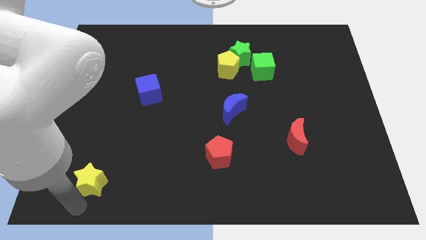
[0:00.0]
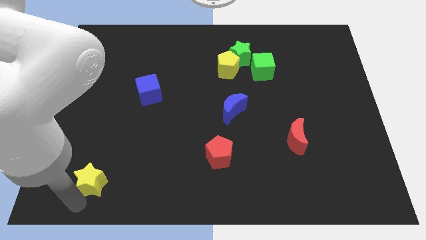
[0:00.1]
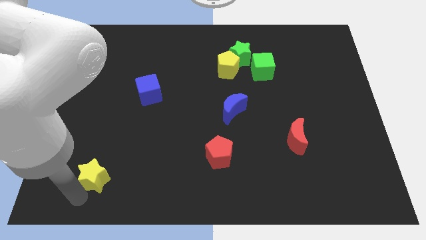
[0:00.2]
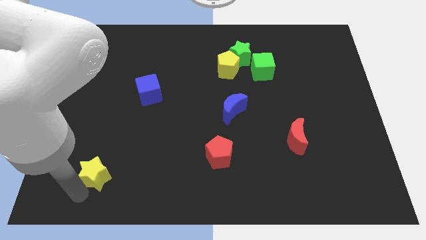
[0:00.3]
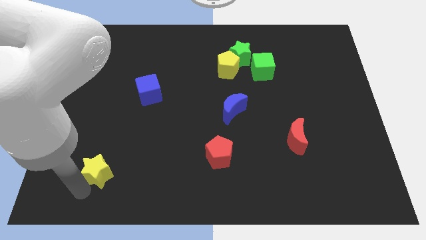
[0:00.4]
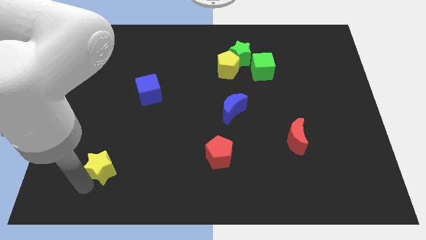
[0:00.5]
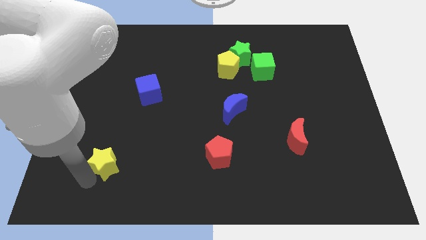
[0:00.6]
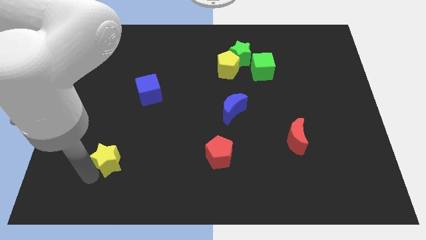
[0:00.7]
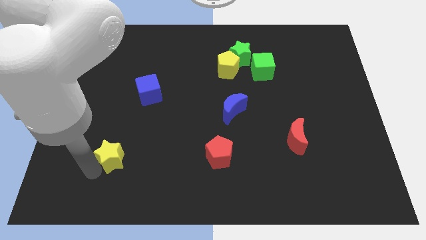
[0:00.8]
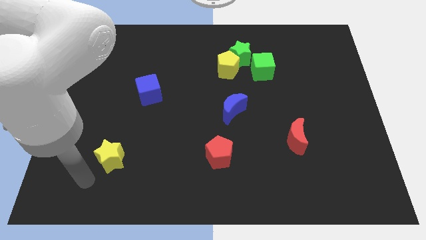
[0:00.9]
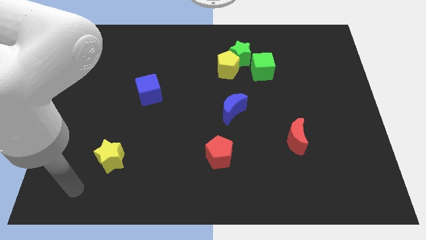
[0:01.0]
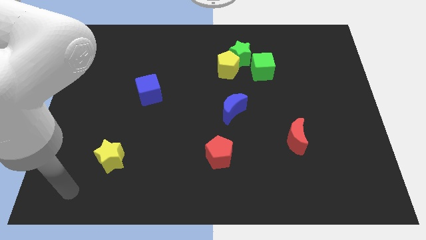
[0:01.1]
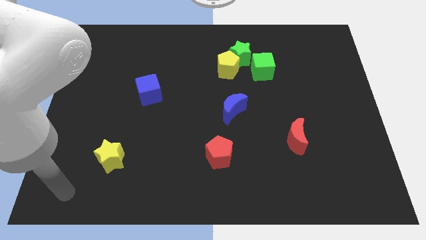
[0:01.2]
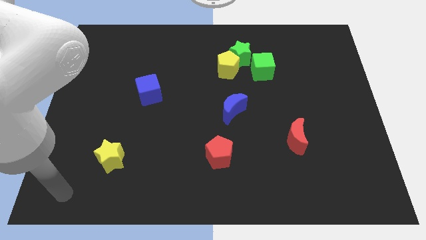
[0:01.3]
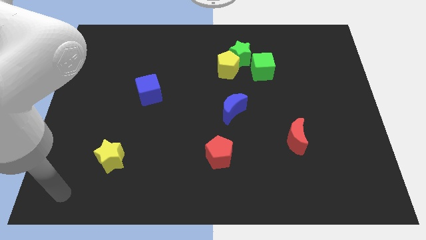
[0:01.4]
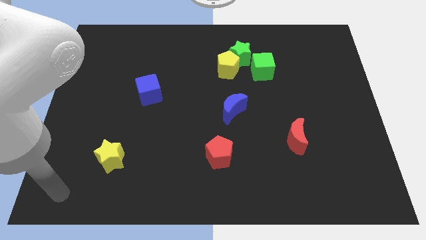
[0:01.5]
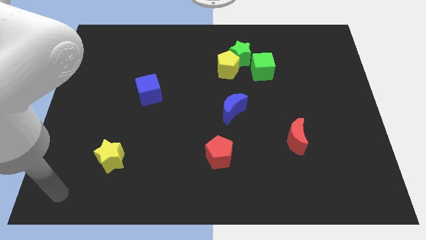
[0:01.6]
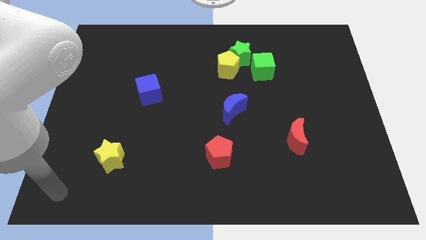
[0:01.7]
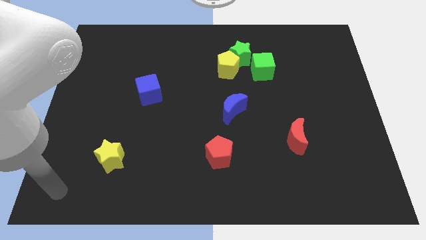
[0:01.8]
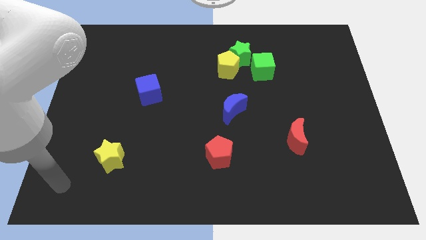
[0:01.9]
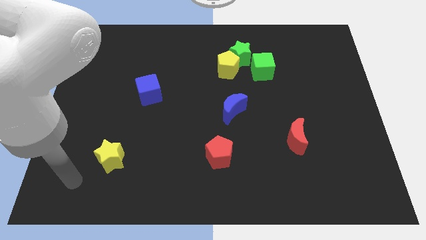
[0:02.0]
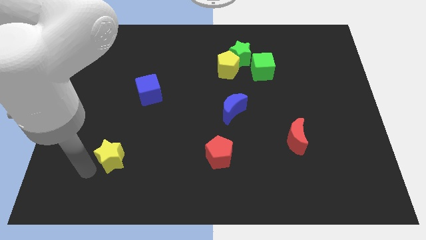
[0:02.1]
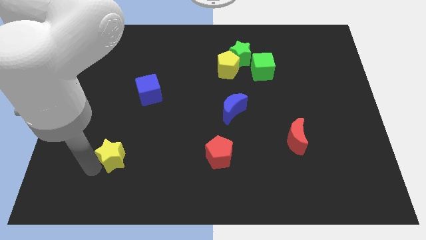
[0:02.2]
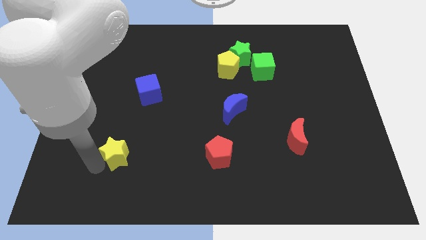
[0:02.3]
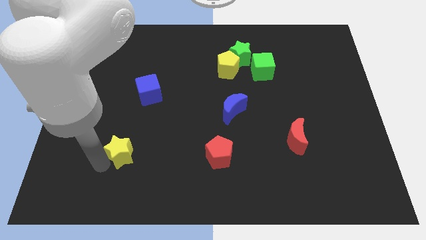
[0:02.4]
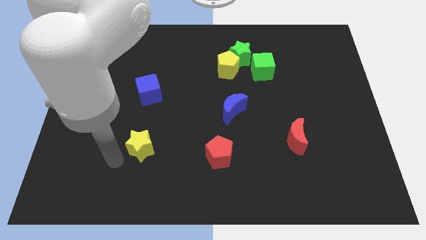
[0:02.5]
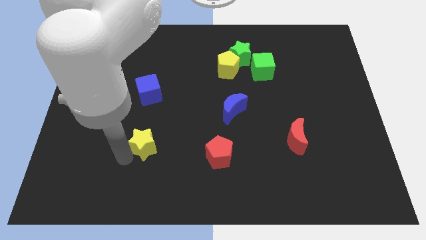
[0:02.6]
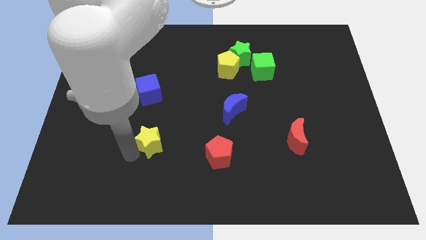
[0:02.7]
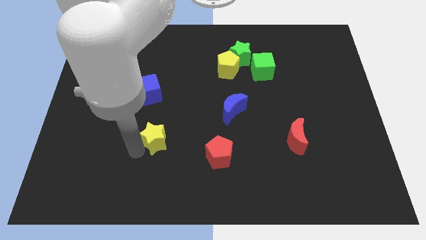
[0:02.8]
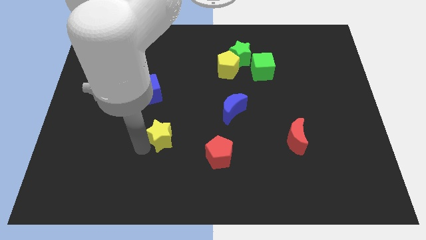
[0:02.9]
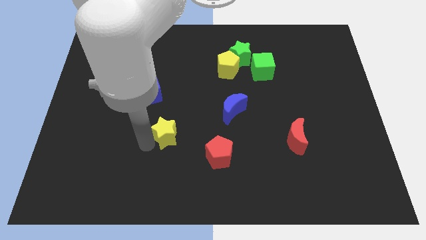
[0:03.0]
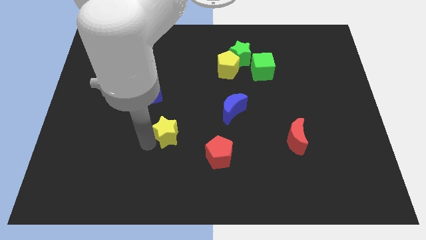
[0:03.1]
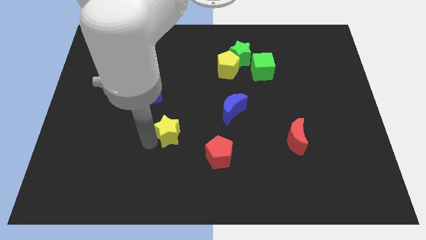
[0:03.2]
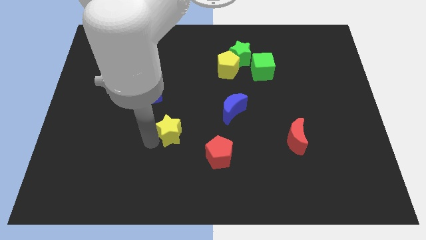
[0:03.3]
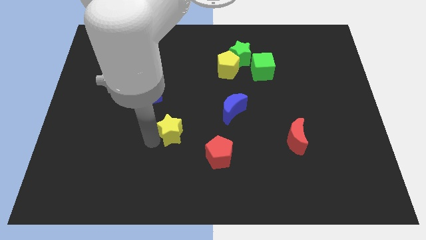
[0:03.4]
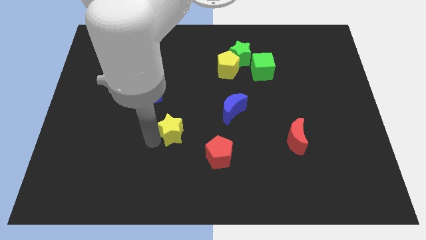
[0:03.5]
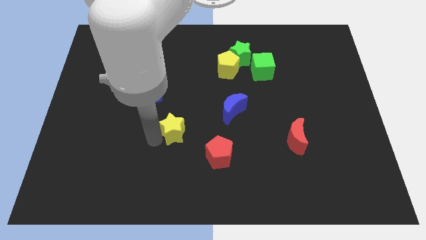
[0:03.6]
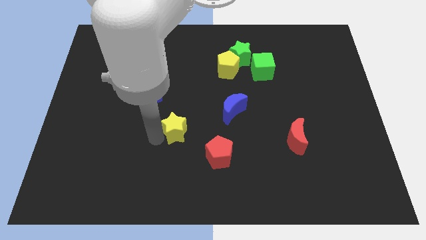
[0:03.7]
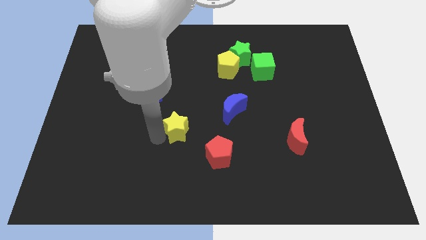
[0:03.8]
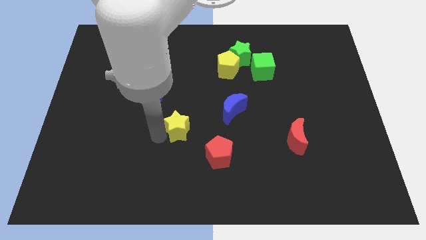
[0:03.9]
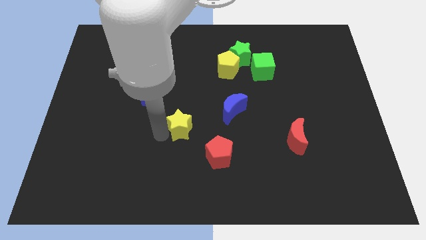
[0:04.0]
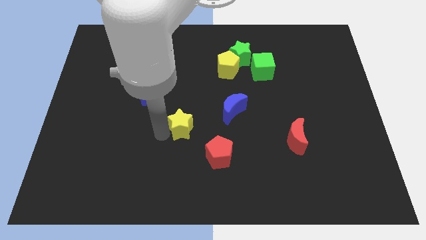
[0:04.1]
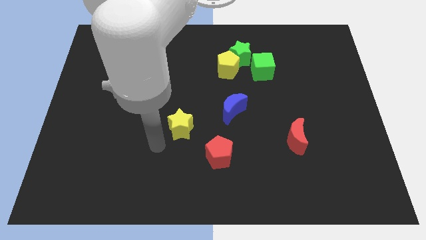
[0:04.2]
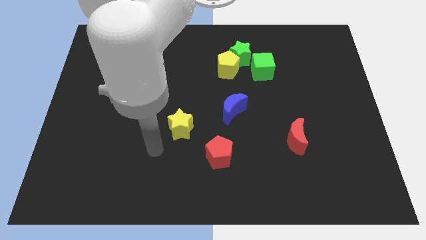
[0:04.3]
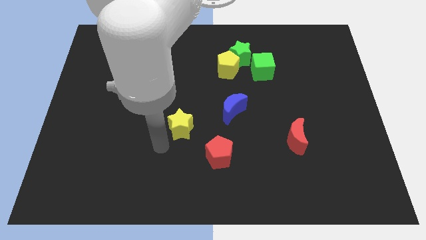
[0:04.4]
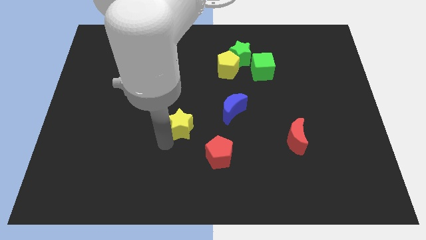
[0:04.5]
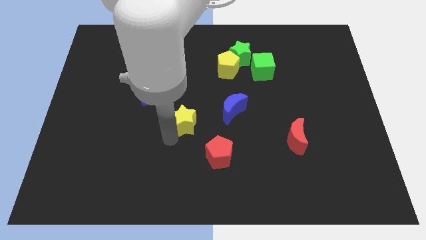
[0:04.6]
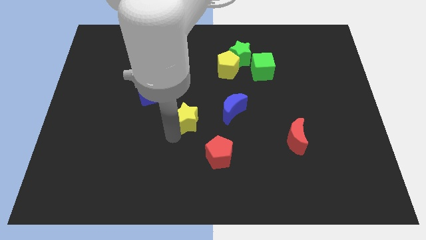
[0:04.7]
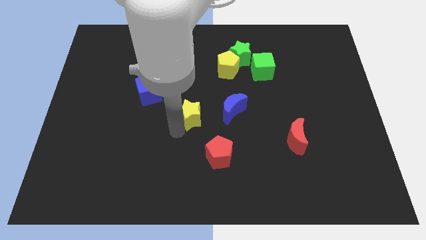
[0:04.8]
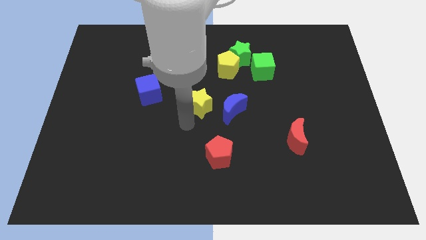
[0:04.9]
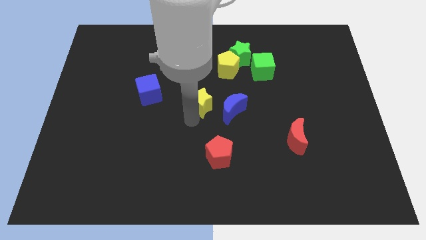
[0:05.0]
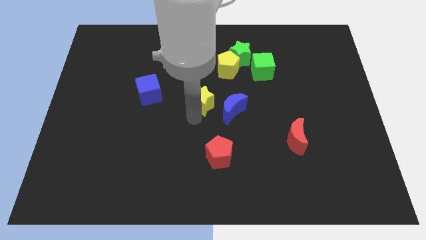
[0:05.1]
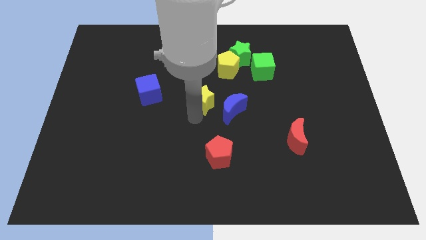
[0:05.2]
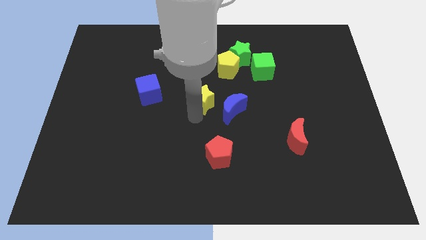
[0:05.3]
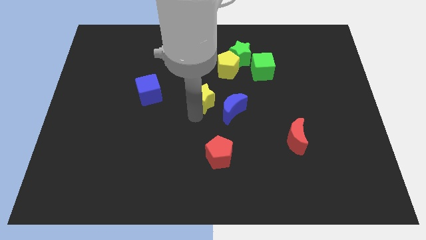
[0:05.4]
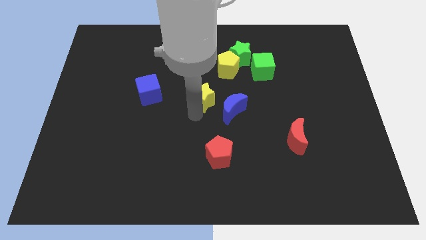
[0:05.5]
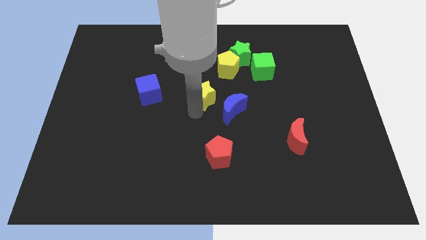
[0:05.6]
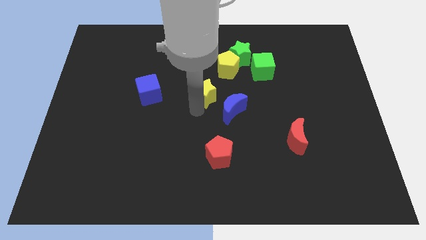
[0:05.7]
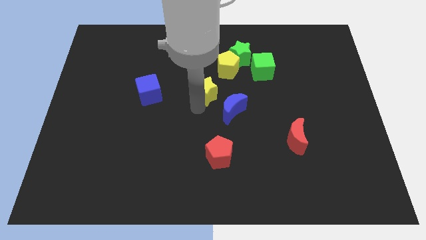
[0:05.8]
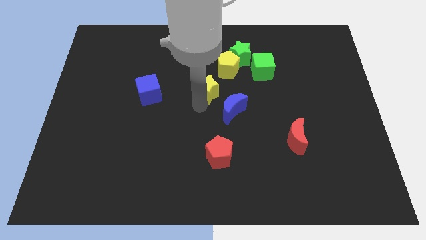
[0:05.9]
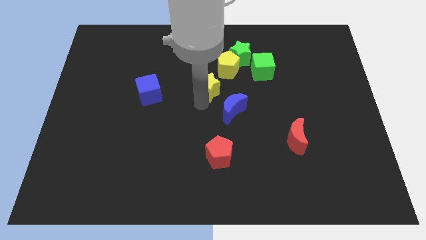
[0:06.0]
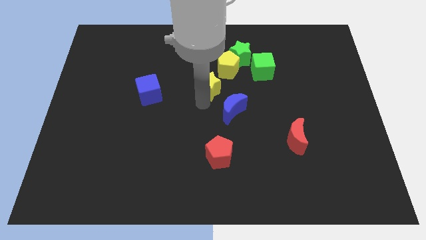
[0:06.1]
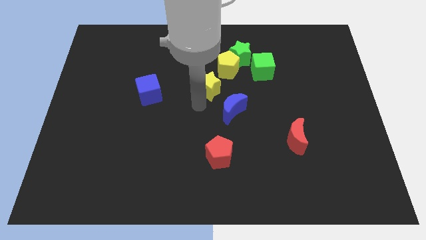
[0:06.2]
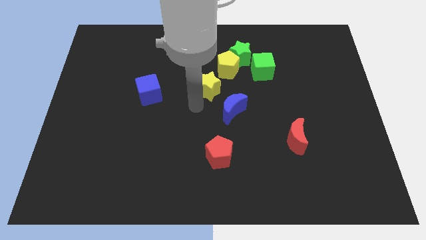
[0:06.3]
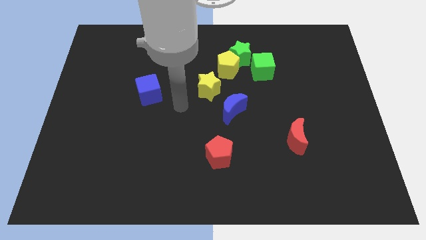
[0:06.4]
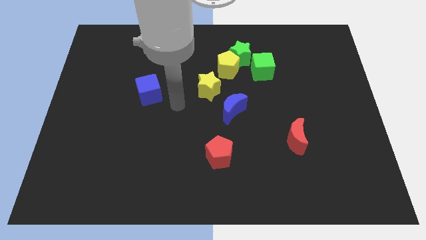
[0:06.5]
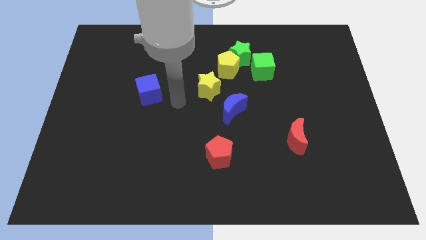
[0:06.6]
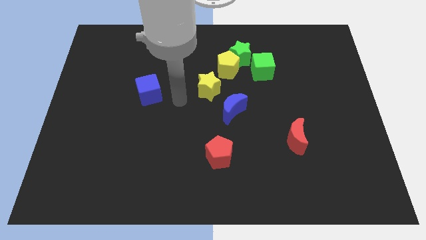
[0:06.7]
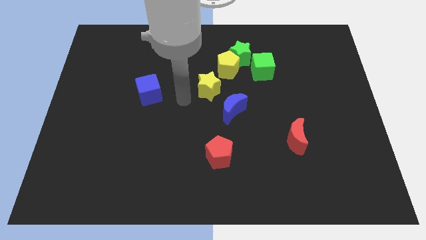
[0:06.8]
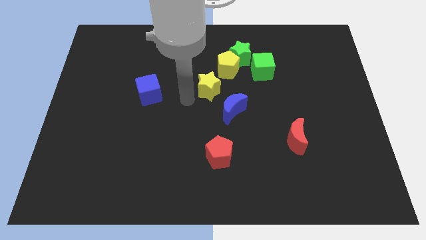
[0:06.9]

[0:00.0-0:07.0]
place the yellow star towards the center of the board

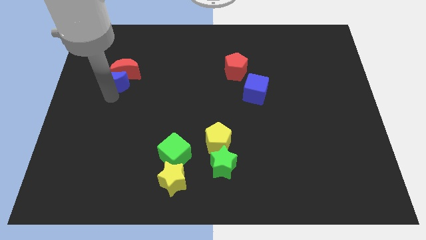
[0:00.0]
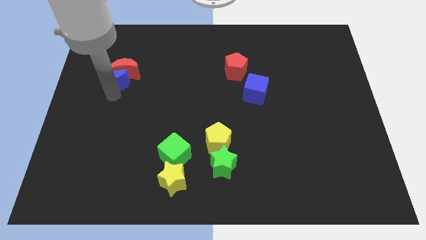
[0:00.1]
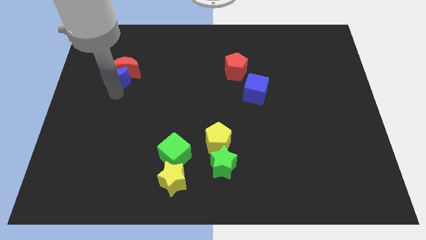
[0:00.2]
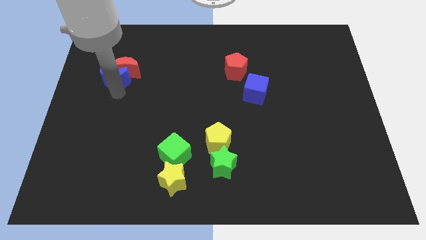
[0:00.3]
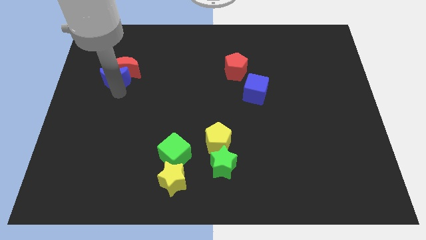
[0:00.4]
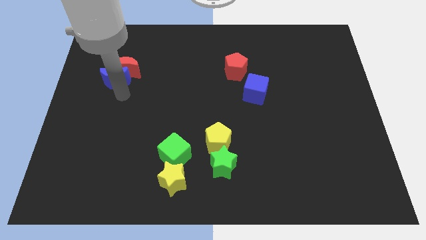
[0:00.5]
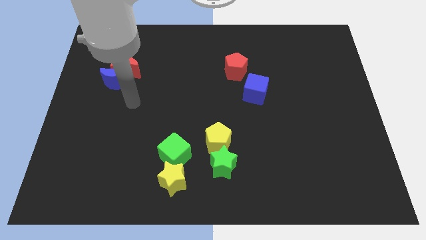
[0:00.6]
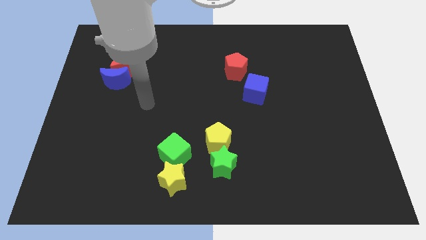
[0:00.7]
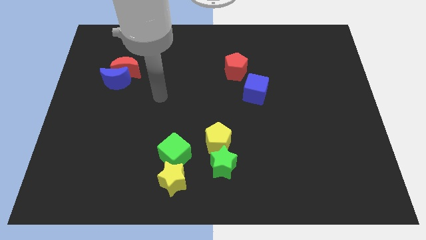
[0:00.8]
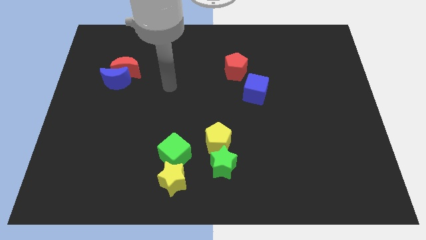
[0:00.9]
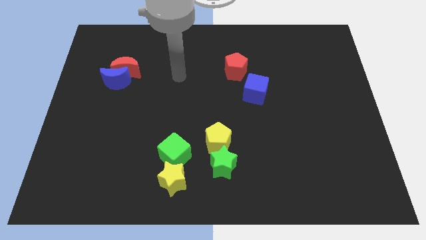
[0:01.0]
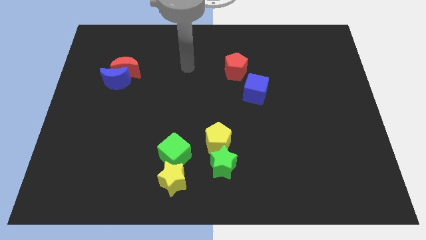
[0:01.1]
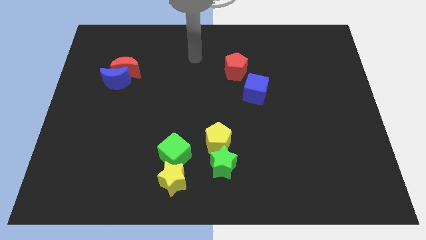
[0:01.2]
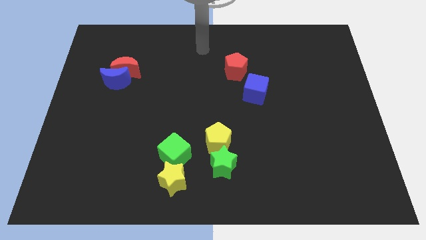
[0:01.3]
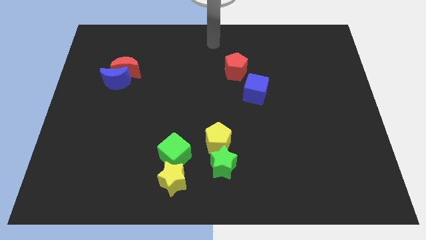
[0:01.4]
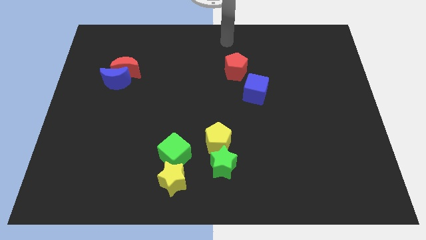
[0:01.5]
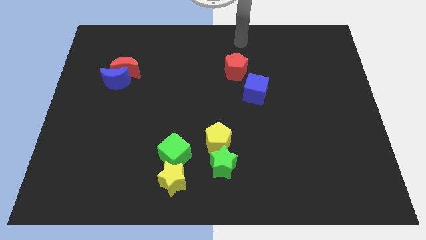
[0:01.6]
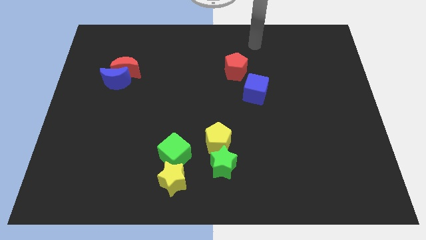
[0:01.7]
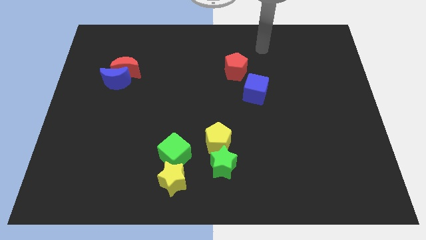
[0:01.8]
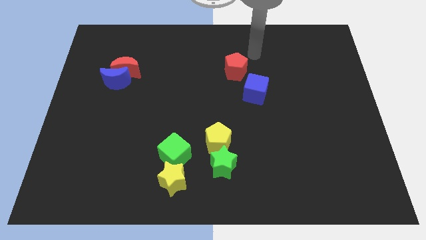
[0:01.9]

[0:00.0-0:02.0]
slide your arm towards red pentagon

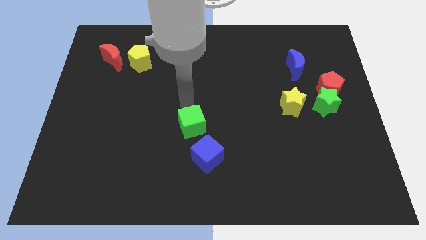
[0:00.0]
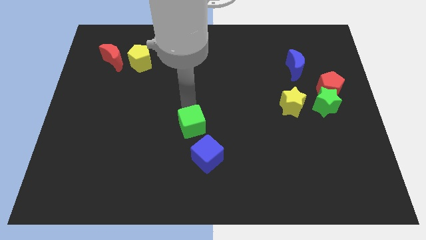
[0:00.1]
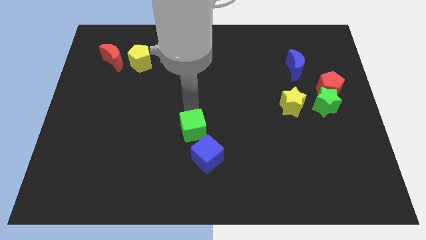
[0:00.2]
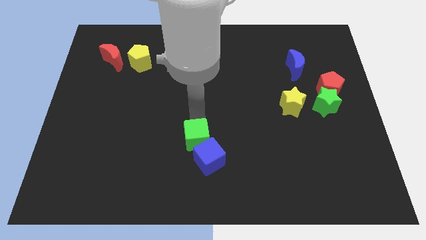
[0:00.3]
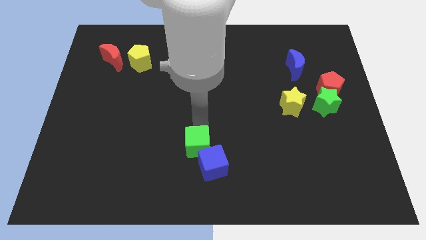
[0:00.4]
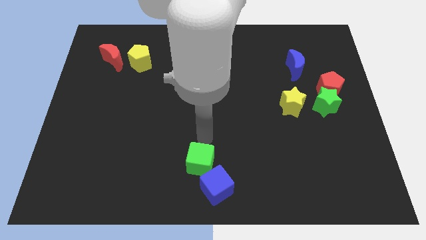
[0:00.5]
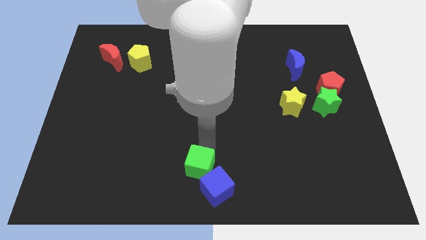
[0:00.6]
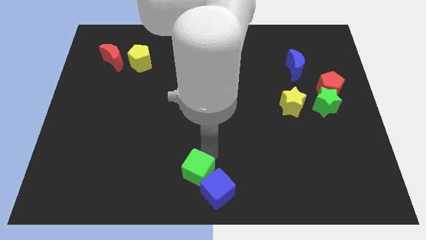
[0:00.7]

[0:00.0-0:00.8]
push the green cube into blue cube
